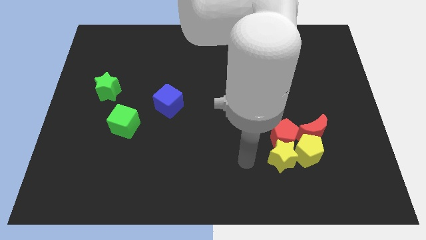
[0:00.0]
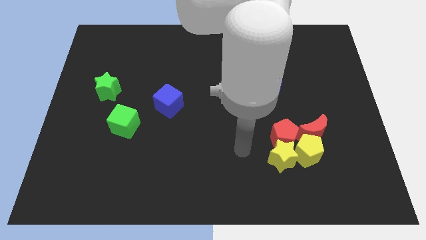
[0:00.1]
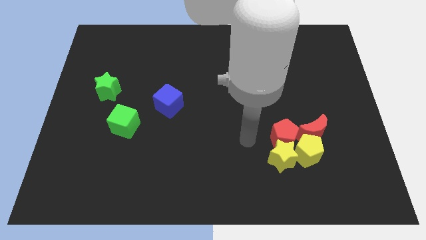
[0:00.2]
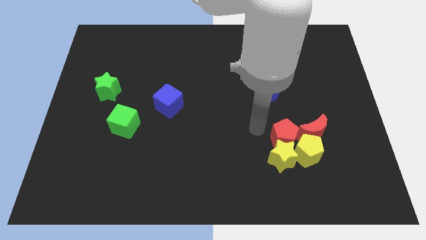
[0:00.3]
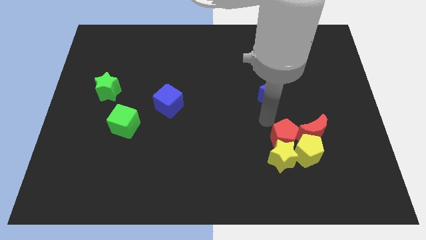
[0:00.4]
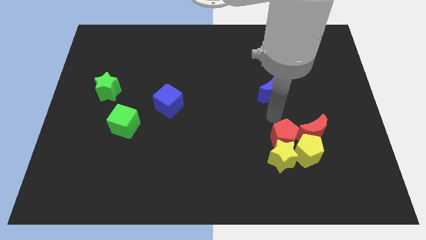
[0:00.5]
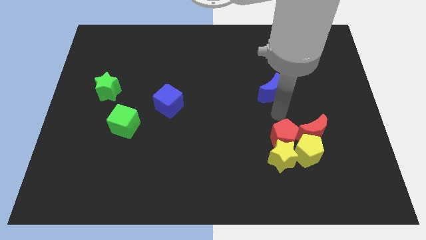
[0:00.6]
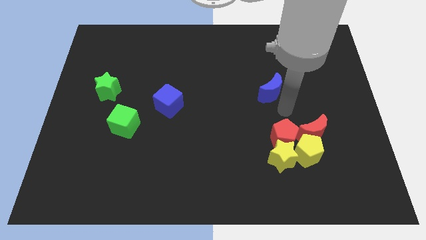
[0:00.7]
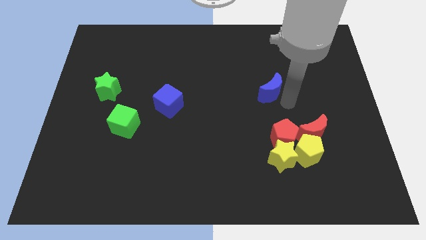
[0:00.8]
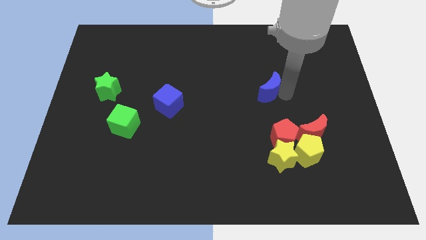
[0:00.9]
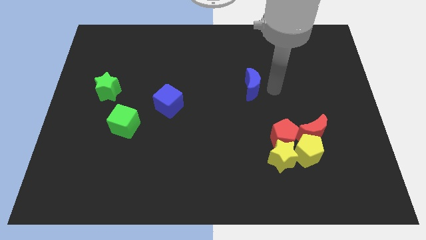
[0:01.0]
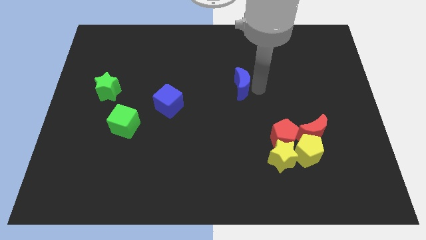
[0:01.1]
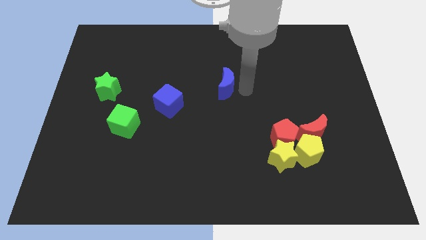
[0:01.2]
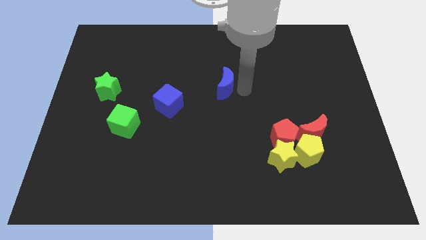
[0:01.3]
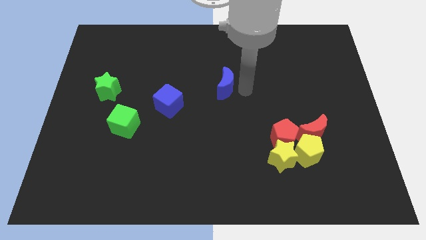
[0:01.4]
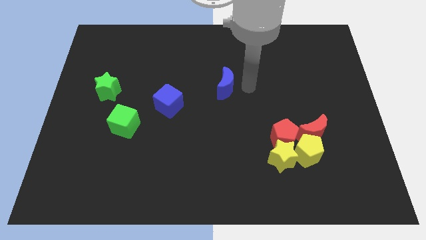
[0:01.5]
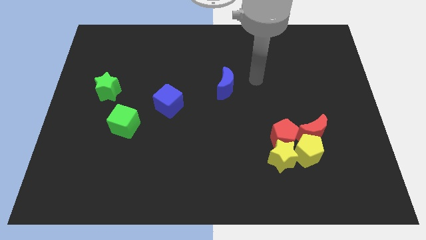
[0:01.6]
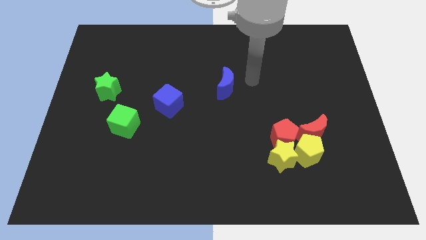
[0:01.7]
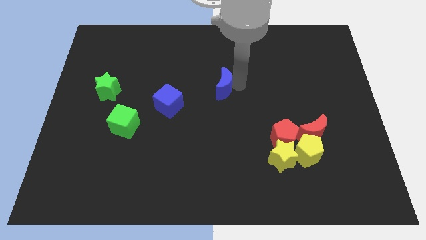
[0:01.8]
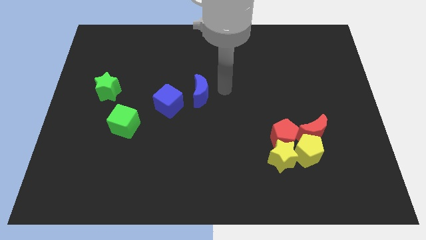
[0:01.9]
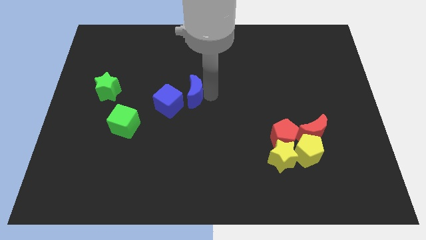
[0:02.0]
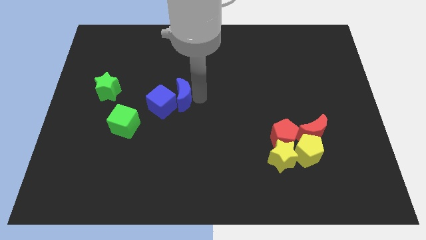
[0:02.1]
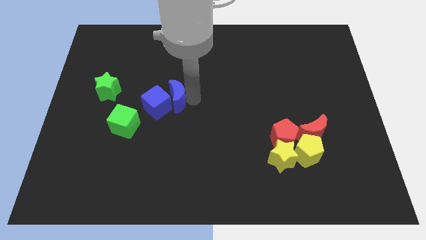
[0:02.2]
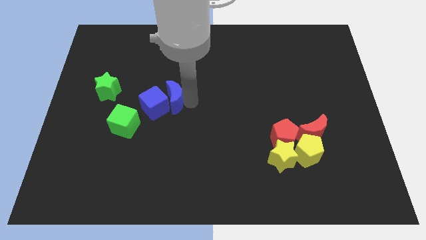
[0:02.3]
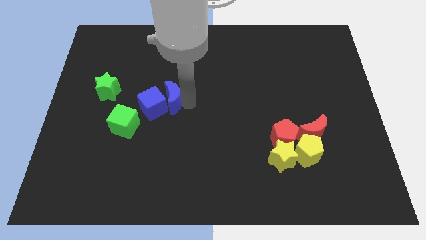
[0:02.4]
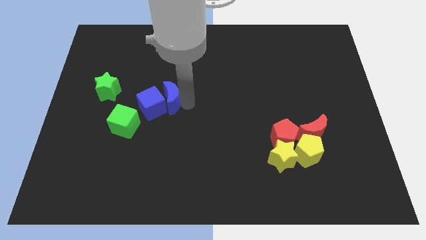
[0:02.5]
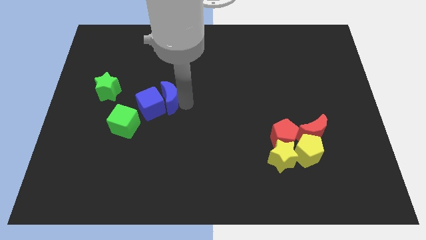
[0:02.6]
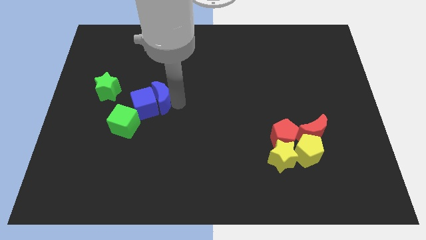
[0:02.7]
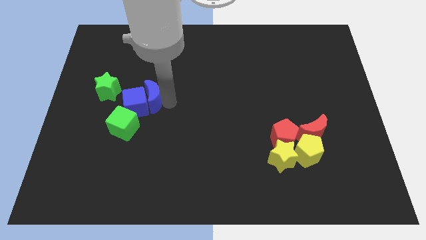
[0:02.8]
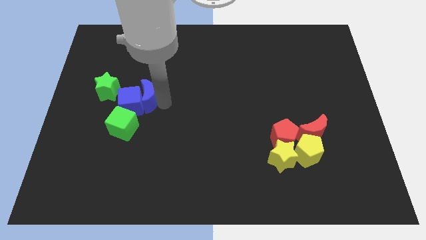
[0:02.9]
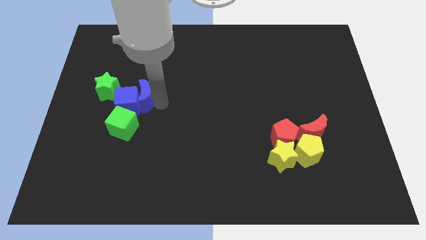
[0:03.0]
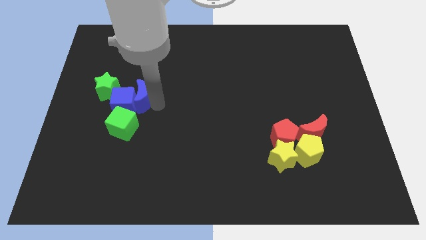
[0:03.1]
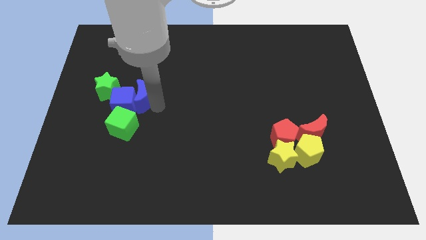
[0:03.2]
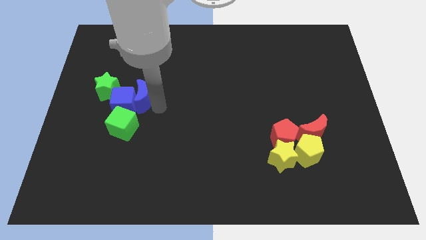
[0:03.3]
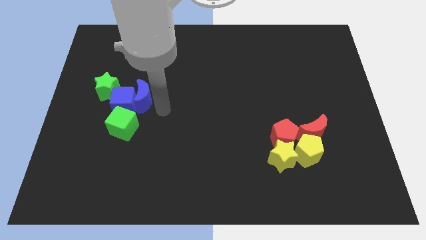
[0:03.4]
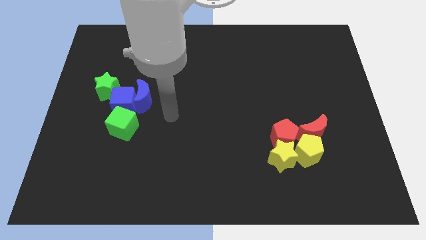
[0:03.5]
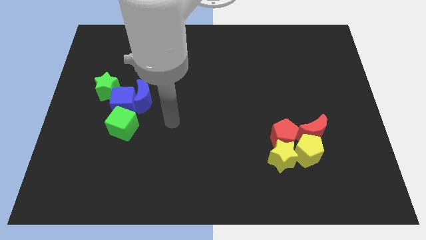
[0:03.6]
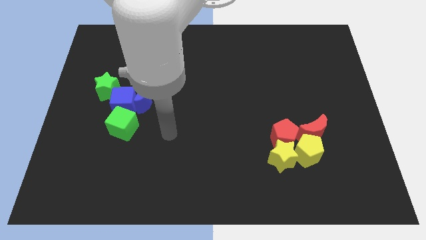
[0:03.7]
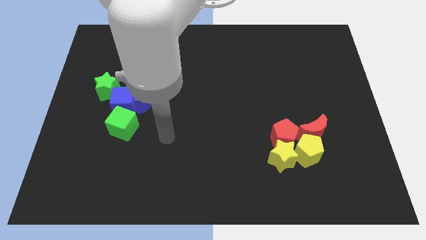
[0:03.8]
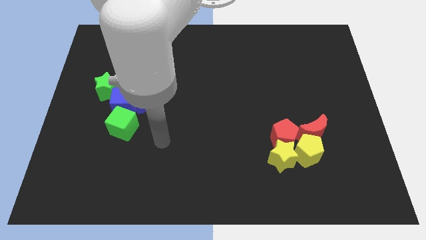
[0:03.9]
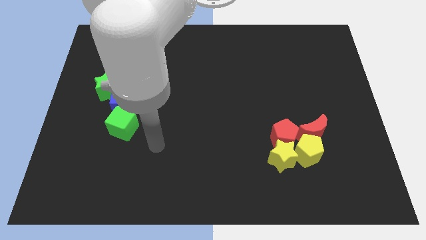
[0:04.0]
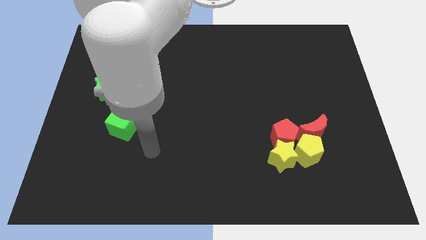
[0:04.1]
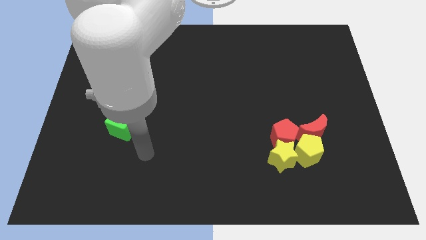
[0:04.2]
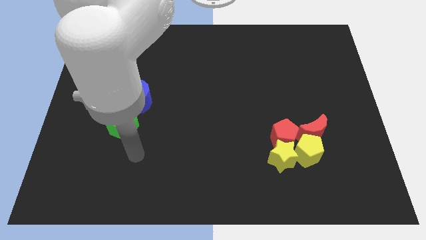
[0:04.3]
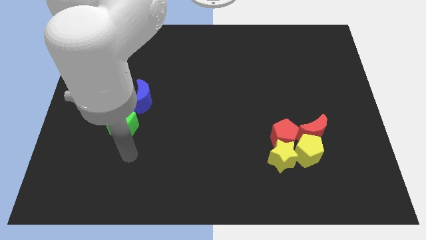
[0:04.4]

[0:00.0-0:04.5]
push the blue crescent into the blue cube

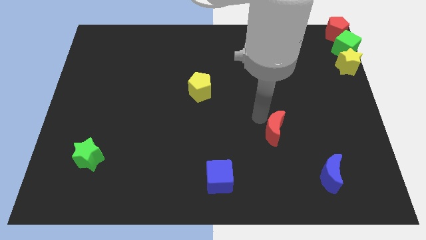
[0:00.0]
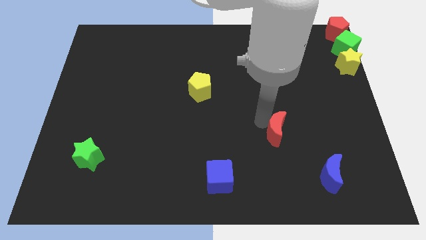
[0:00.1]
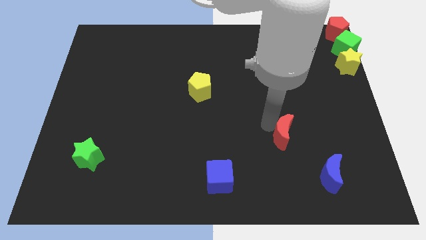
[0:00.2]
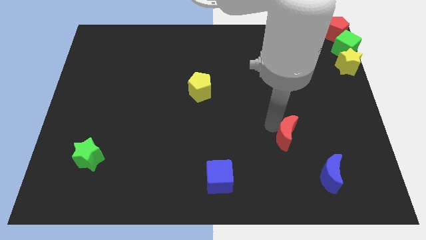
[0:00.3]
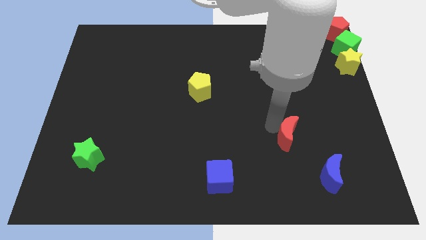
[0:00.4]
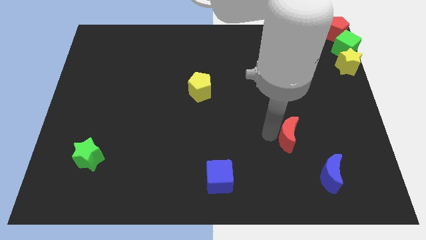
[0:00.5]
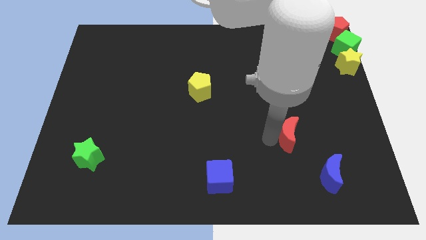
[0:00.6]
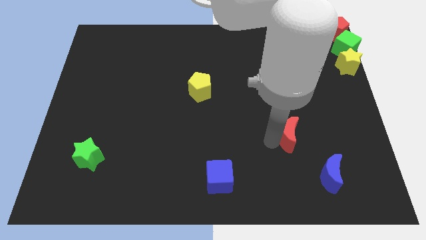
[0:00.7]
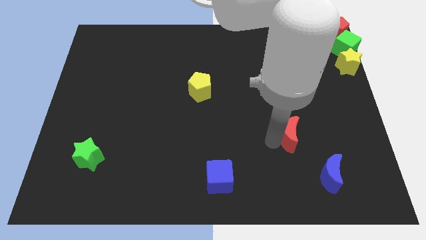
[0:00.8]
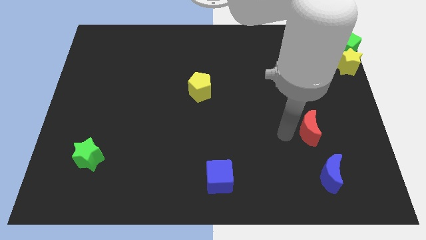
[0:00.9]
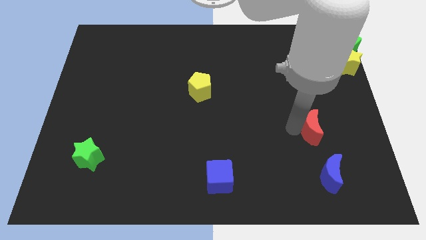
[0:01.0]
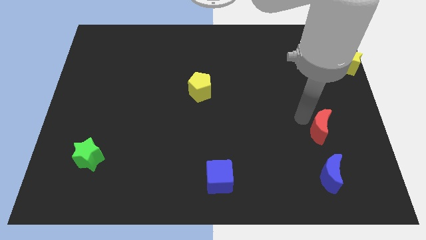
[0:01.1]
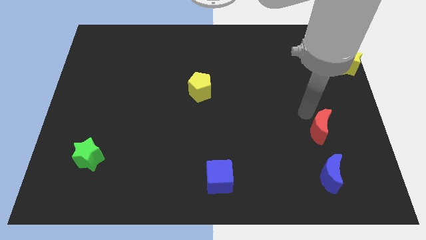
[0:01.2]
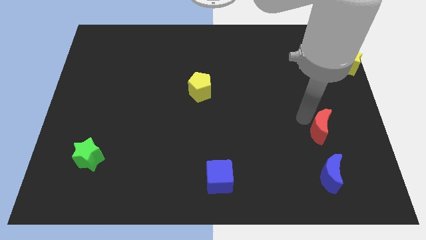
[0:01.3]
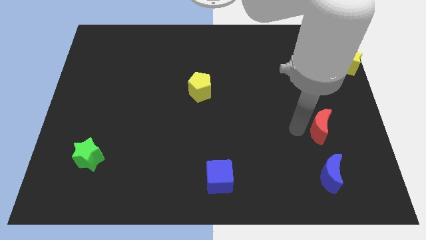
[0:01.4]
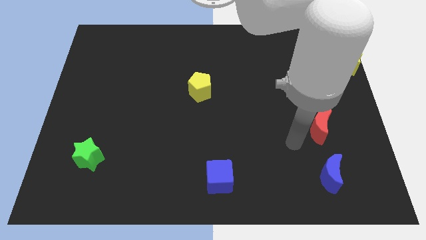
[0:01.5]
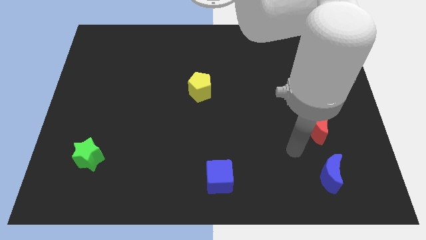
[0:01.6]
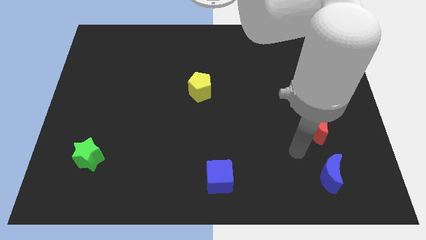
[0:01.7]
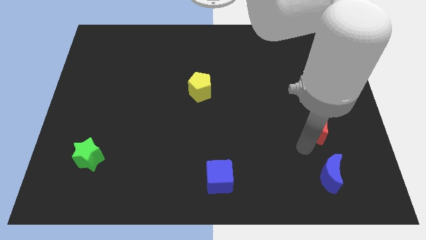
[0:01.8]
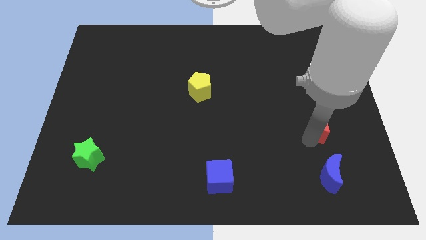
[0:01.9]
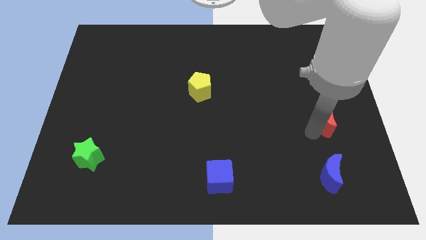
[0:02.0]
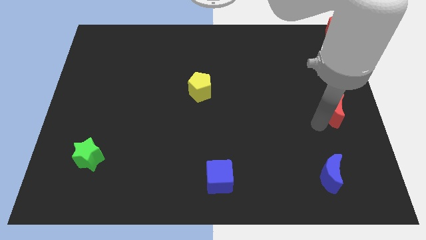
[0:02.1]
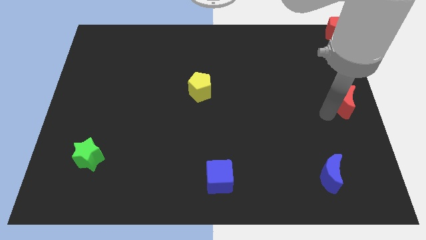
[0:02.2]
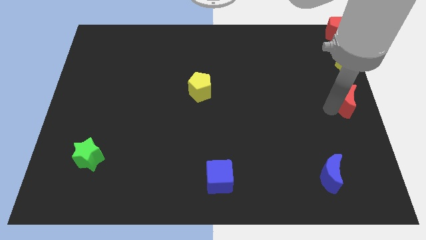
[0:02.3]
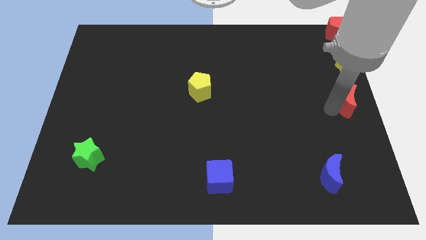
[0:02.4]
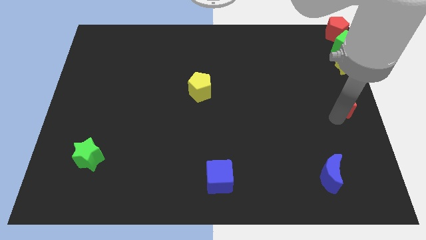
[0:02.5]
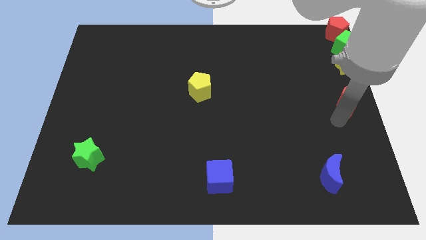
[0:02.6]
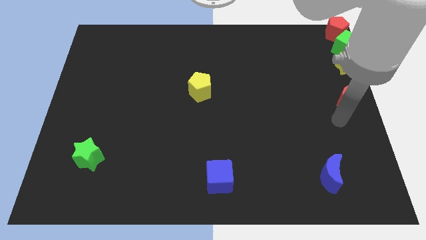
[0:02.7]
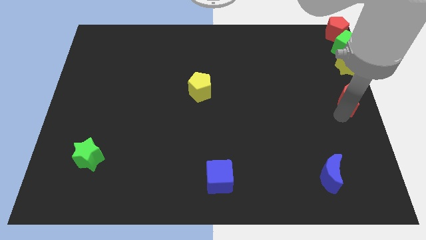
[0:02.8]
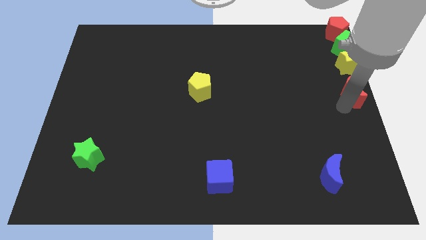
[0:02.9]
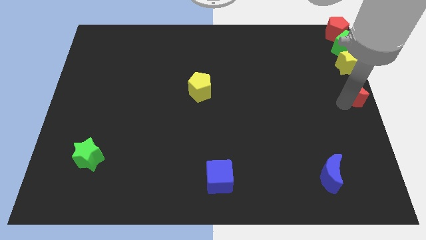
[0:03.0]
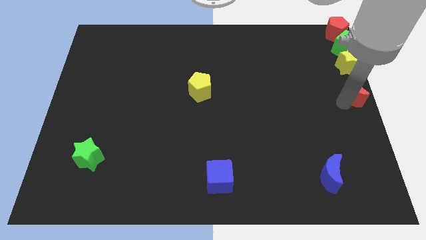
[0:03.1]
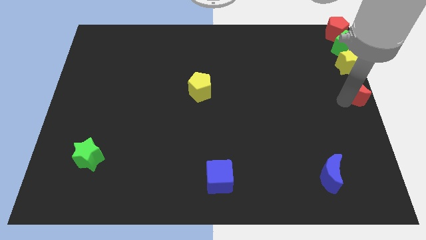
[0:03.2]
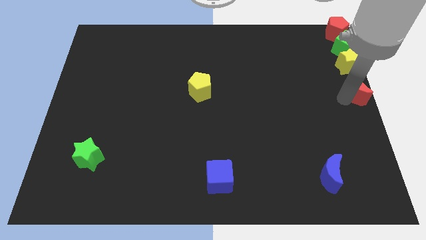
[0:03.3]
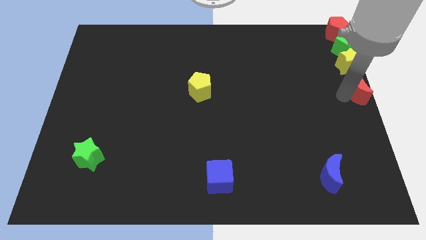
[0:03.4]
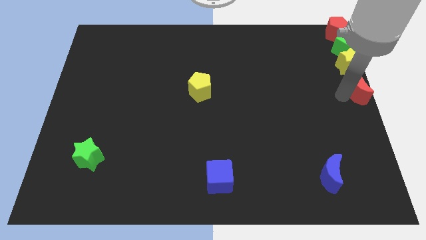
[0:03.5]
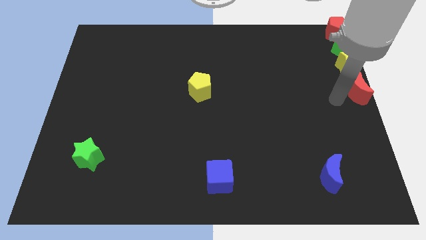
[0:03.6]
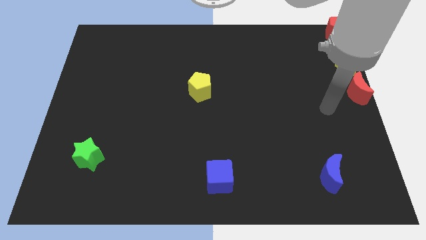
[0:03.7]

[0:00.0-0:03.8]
push red crescent below yellow star

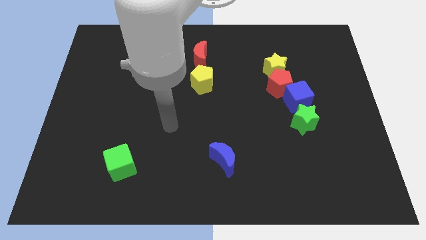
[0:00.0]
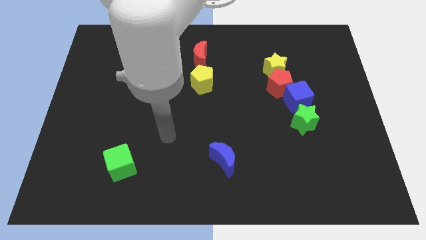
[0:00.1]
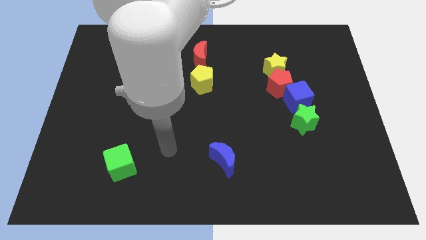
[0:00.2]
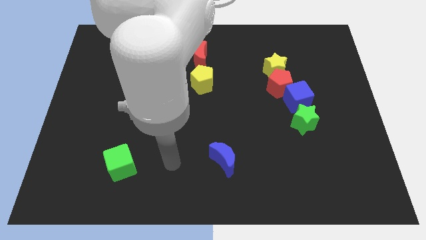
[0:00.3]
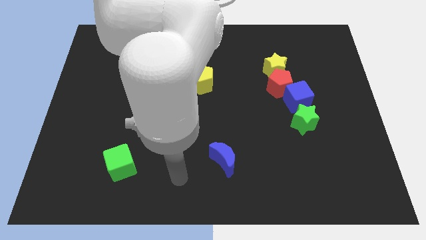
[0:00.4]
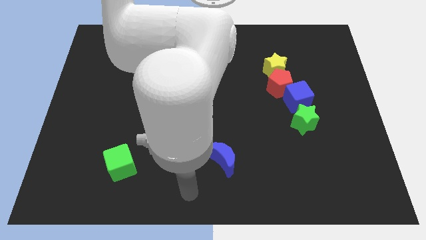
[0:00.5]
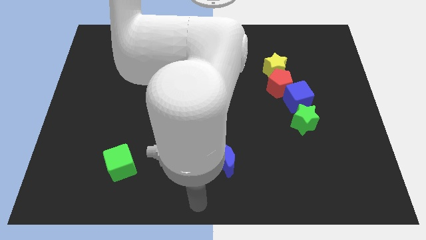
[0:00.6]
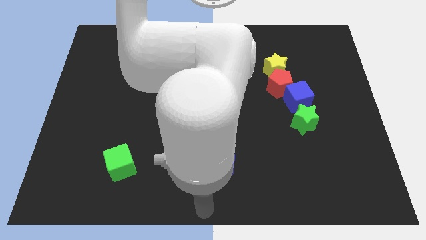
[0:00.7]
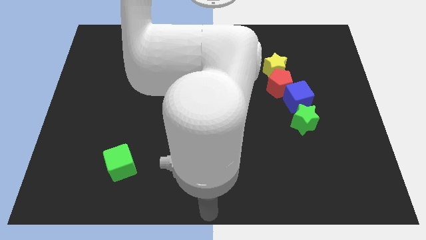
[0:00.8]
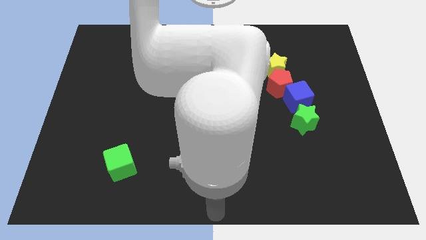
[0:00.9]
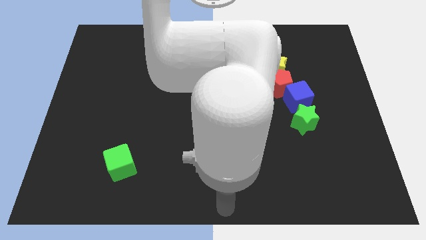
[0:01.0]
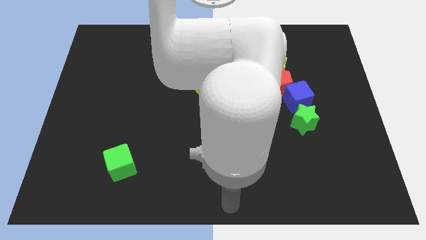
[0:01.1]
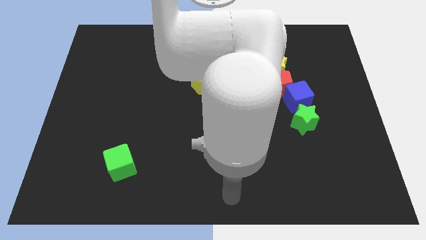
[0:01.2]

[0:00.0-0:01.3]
move your arm to the bottom of the blue crescent
